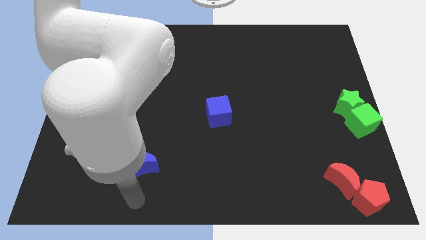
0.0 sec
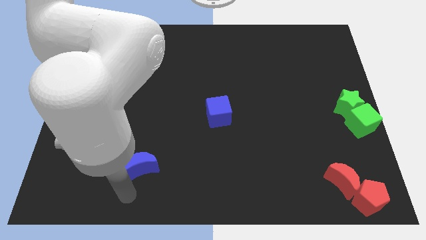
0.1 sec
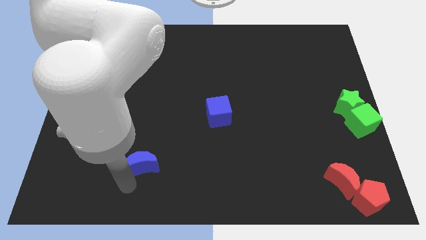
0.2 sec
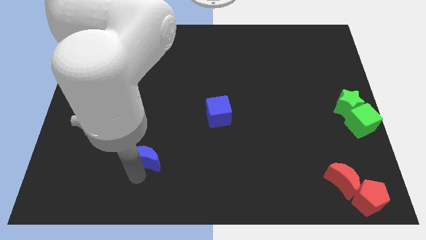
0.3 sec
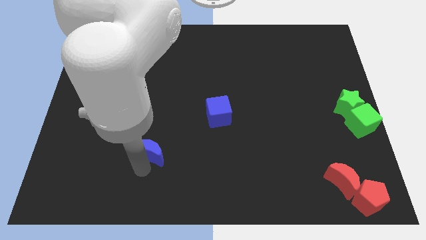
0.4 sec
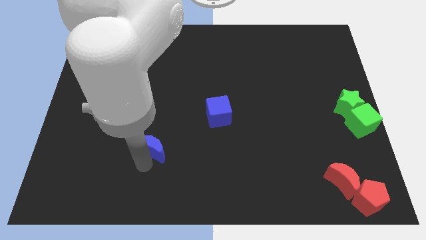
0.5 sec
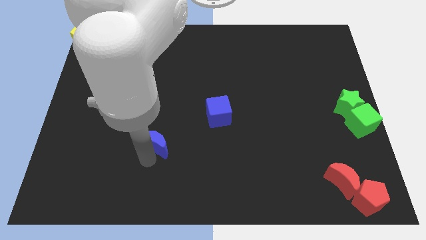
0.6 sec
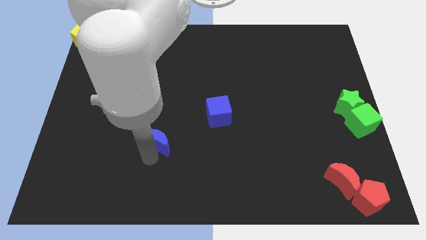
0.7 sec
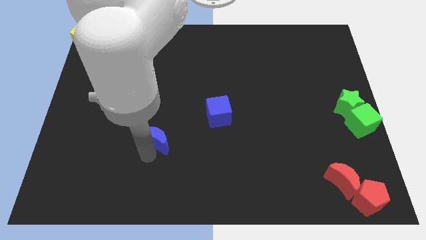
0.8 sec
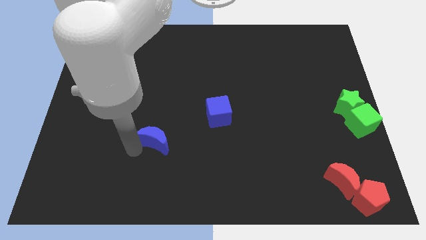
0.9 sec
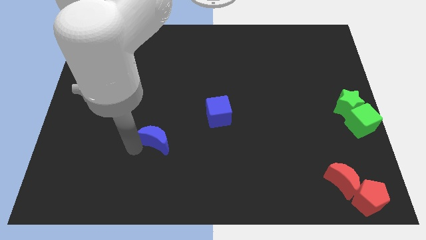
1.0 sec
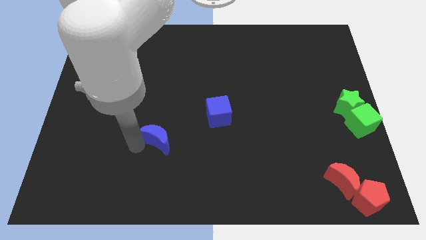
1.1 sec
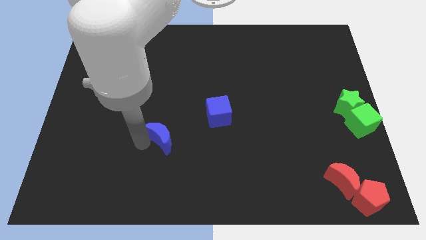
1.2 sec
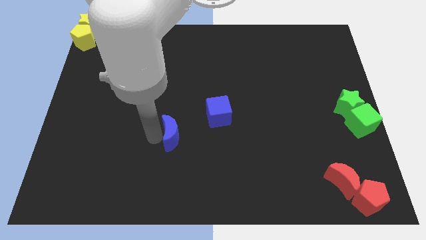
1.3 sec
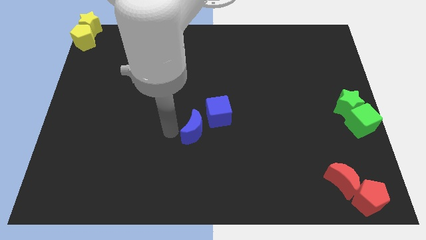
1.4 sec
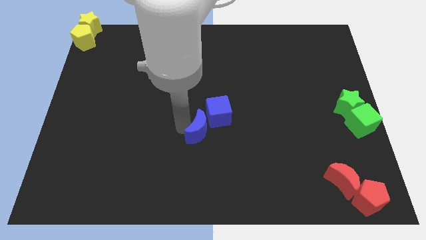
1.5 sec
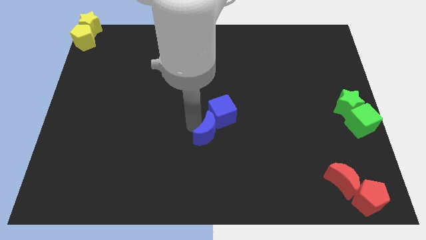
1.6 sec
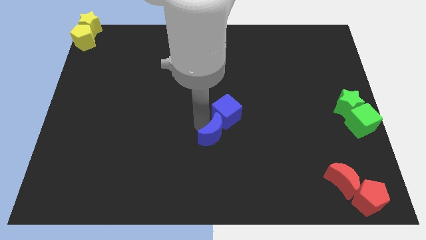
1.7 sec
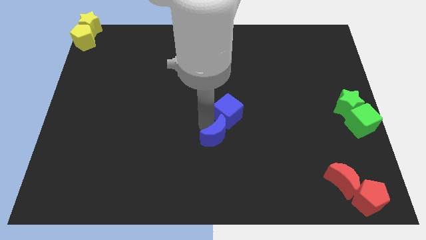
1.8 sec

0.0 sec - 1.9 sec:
pus blue crescent towards blue cube

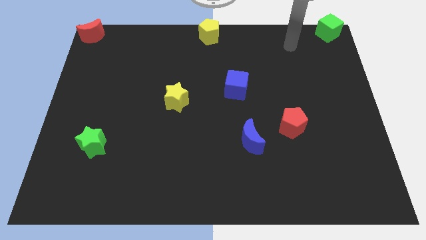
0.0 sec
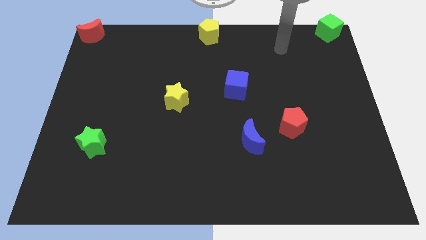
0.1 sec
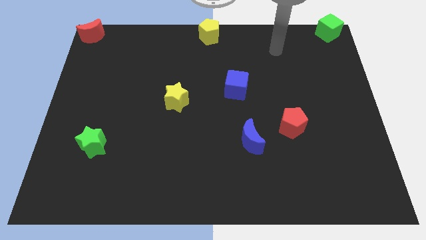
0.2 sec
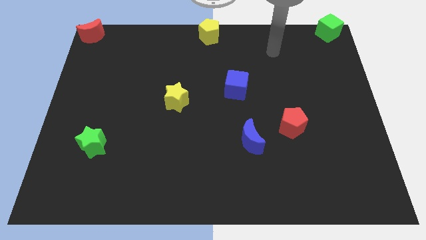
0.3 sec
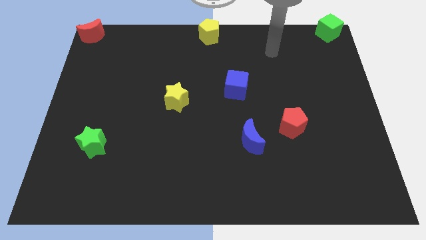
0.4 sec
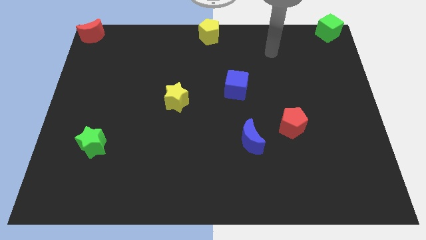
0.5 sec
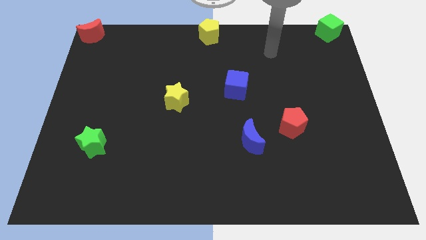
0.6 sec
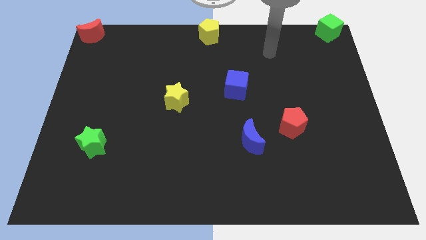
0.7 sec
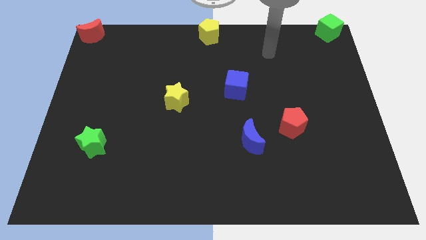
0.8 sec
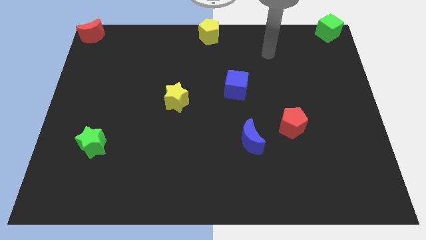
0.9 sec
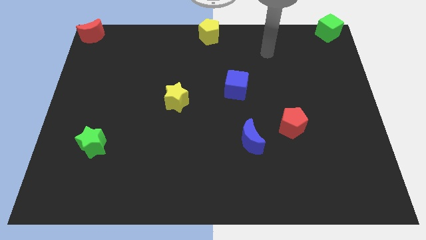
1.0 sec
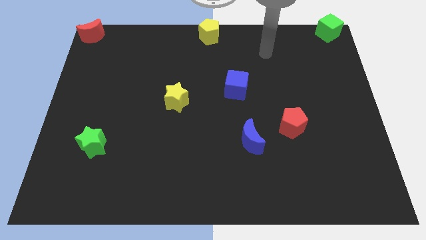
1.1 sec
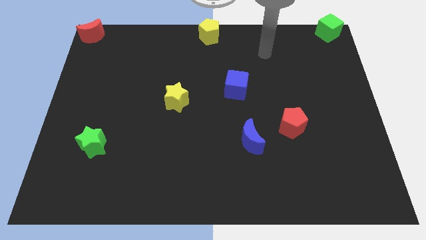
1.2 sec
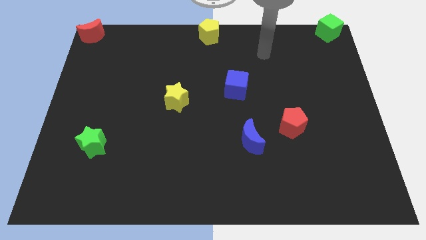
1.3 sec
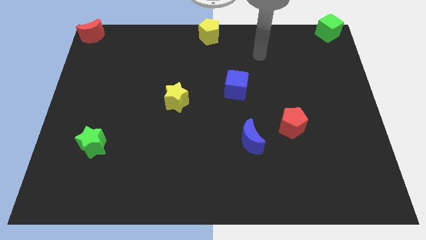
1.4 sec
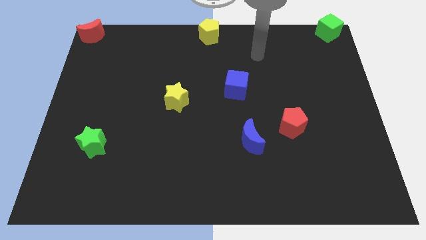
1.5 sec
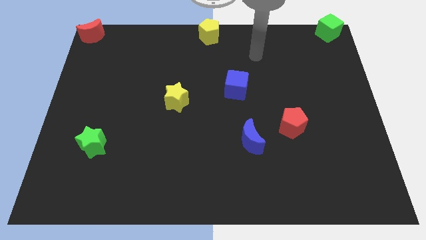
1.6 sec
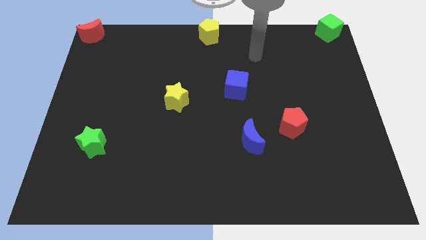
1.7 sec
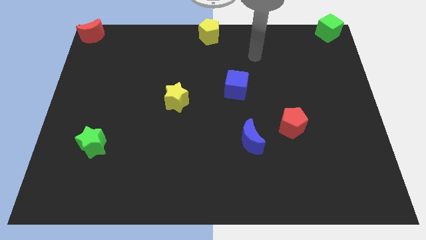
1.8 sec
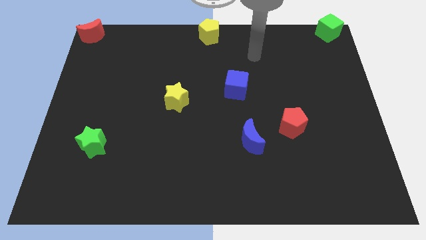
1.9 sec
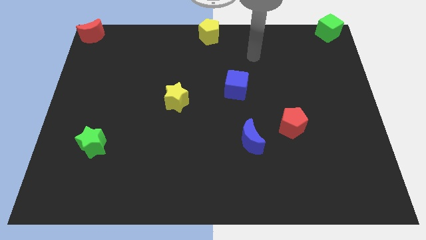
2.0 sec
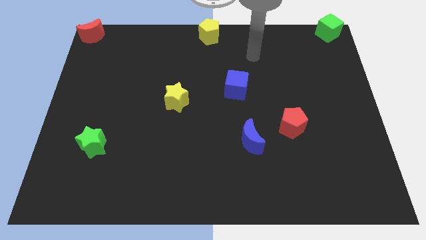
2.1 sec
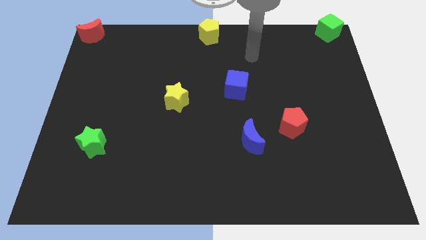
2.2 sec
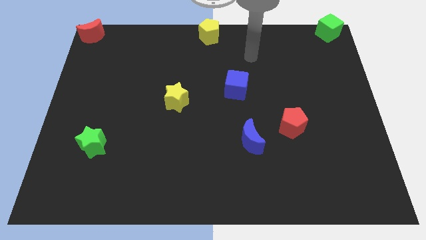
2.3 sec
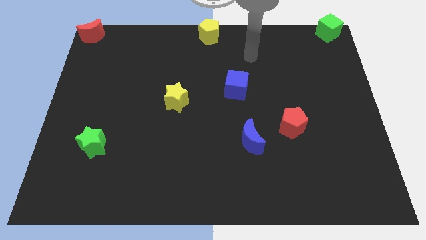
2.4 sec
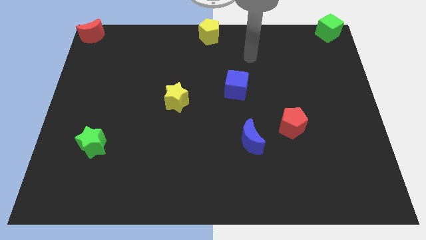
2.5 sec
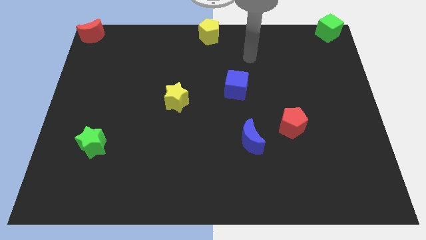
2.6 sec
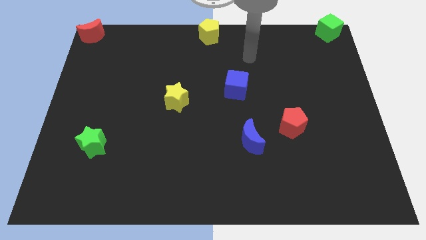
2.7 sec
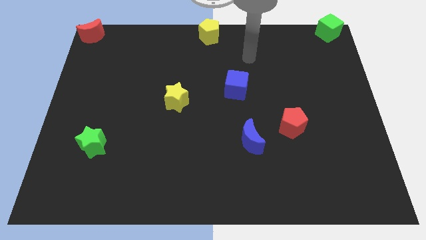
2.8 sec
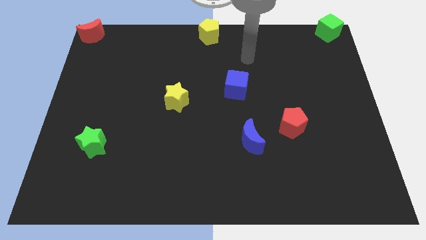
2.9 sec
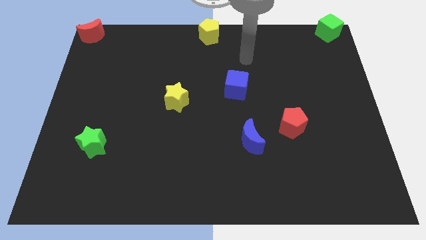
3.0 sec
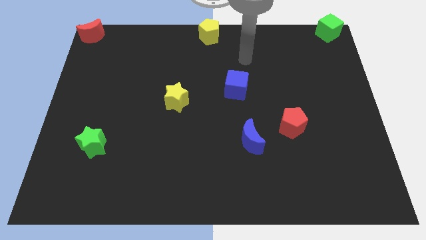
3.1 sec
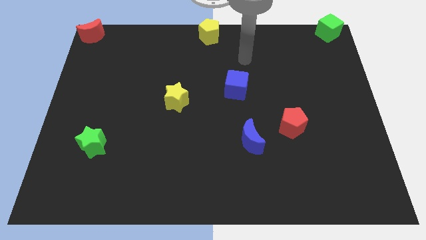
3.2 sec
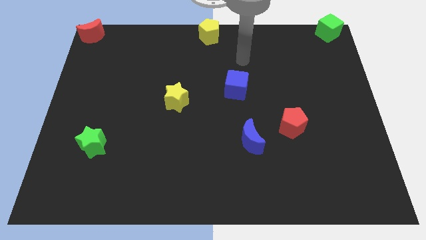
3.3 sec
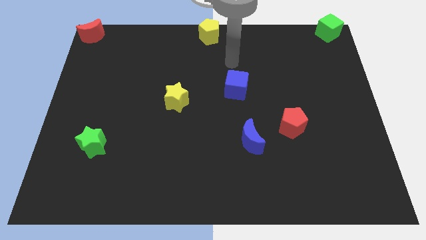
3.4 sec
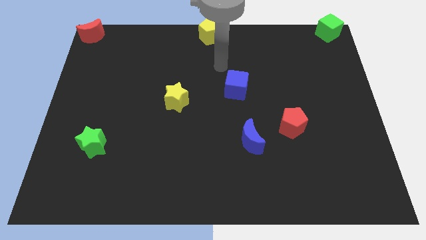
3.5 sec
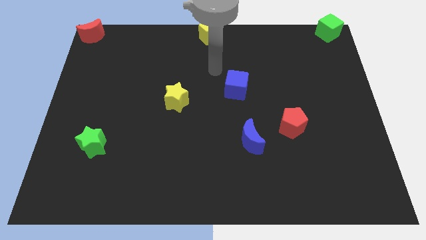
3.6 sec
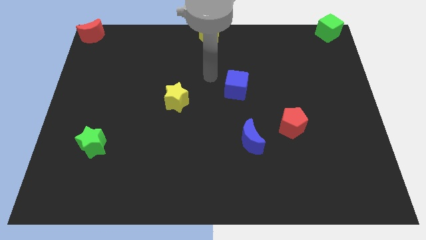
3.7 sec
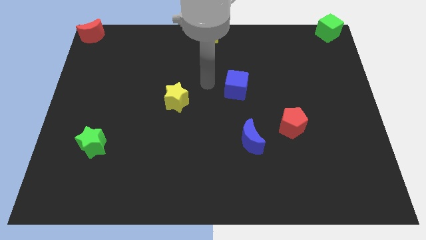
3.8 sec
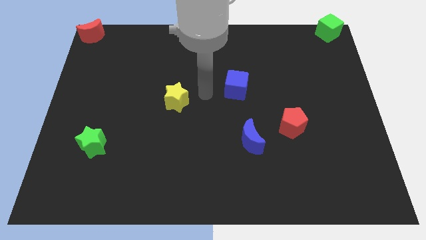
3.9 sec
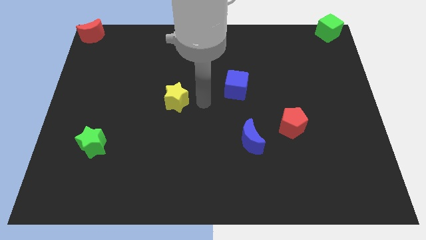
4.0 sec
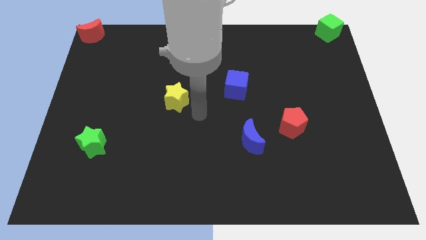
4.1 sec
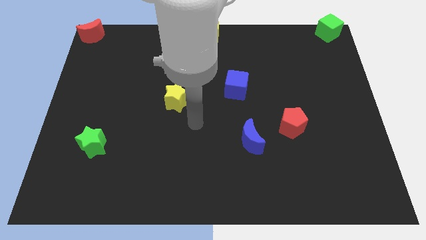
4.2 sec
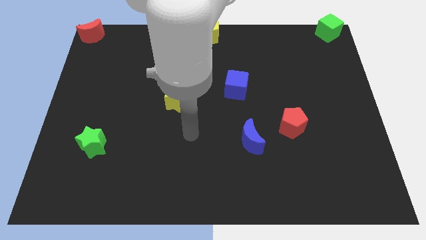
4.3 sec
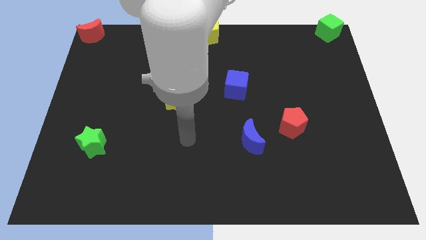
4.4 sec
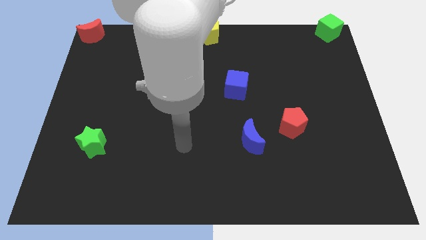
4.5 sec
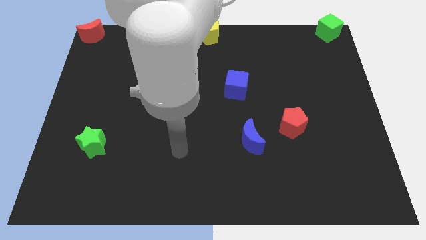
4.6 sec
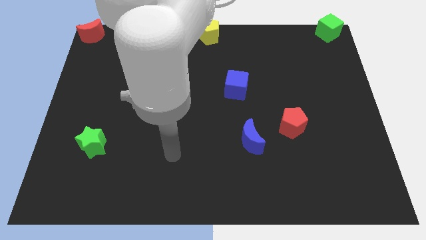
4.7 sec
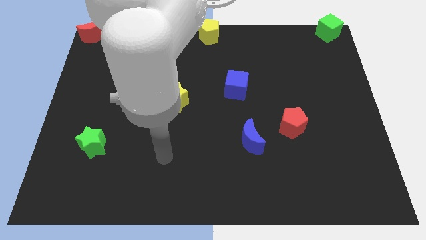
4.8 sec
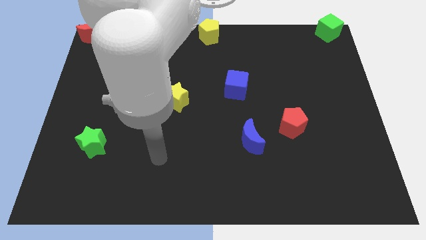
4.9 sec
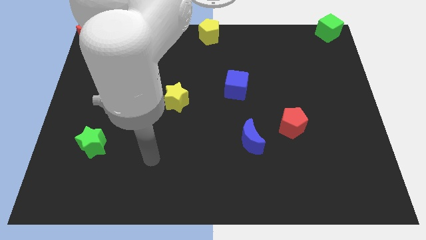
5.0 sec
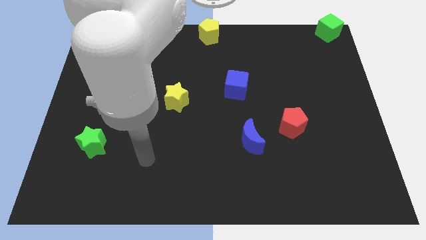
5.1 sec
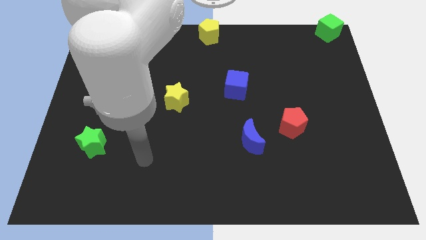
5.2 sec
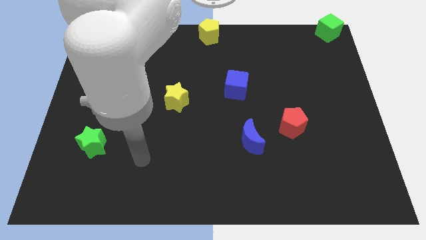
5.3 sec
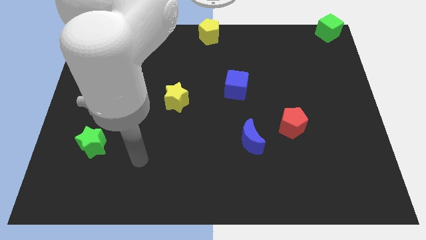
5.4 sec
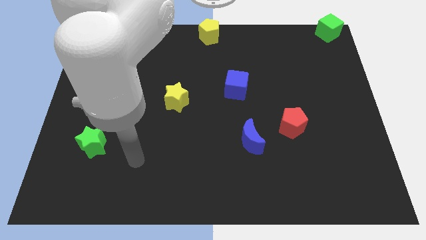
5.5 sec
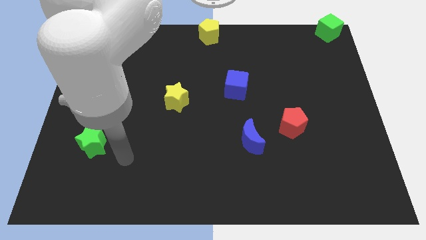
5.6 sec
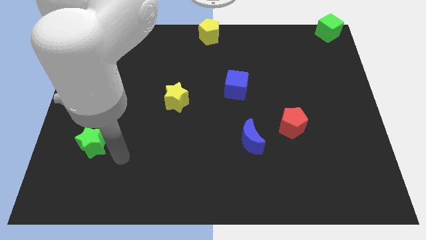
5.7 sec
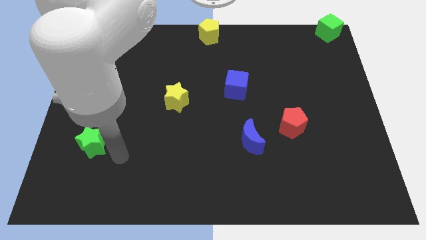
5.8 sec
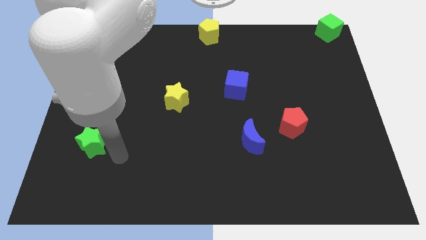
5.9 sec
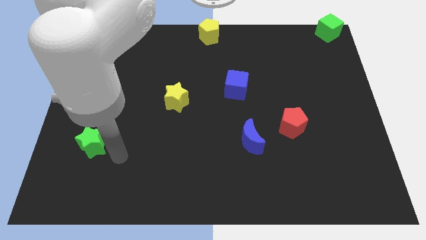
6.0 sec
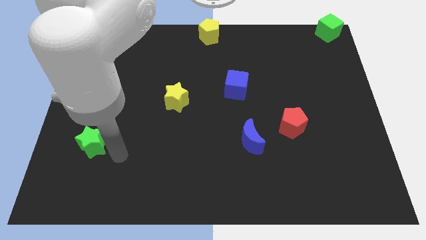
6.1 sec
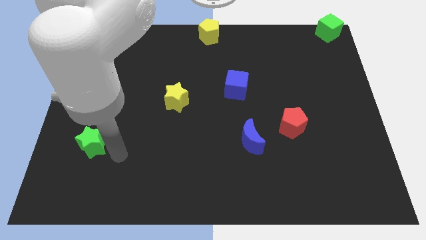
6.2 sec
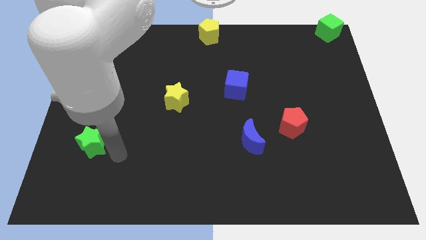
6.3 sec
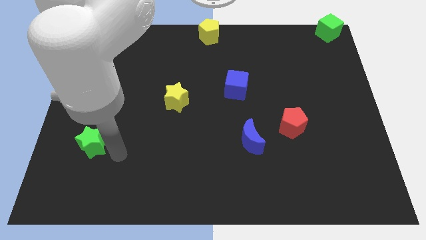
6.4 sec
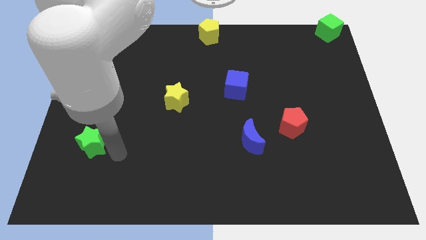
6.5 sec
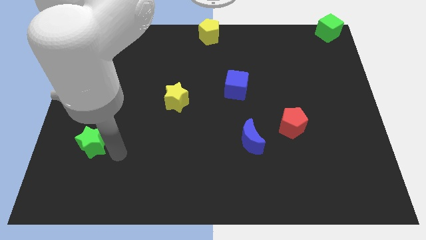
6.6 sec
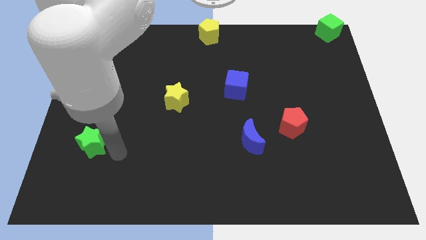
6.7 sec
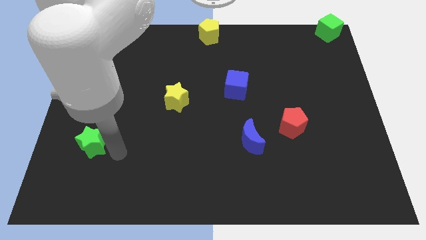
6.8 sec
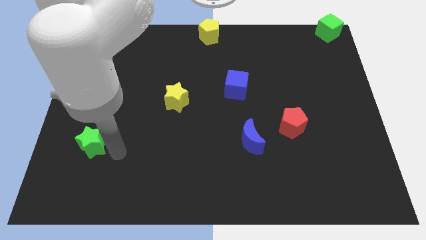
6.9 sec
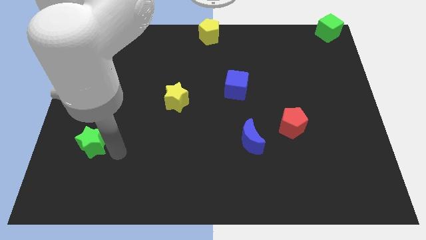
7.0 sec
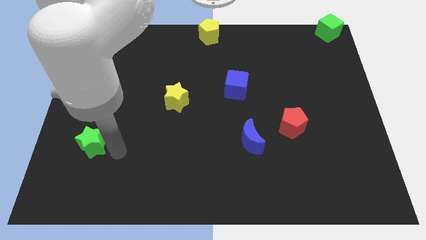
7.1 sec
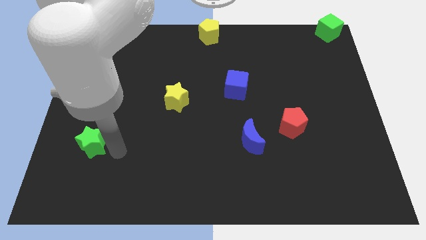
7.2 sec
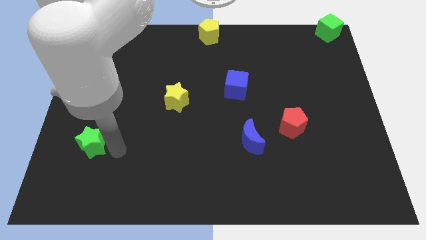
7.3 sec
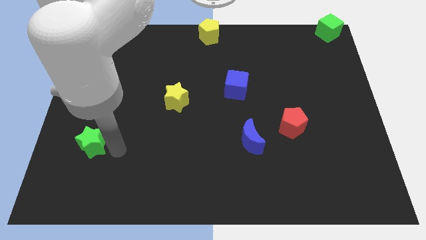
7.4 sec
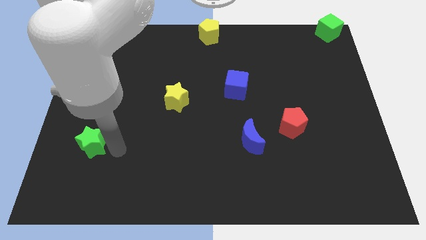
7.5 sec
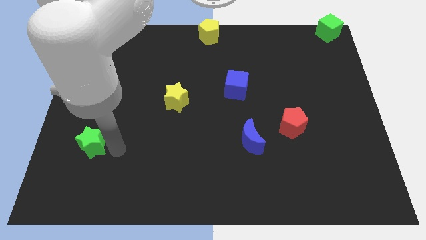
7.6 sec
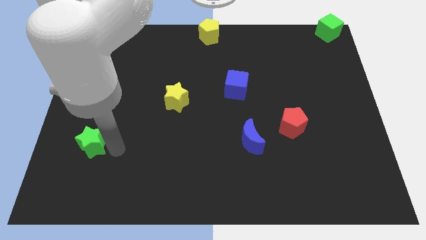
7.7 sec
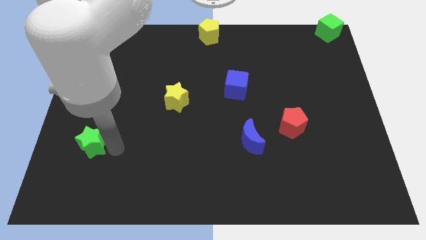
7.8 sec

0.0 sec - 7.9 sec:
move your arm towards the green star
